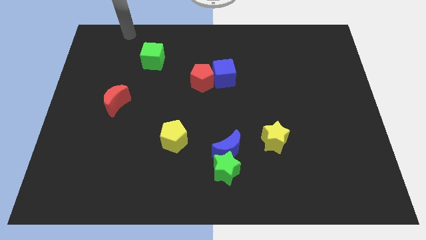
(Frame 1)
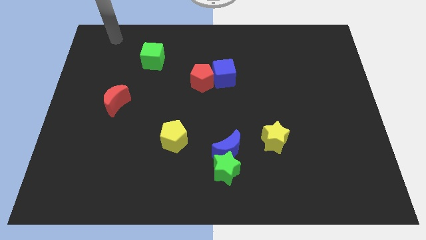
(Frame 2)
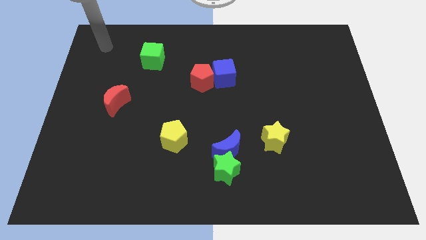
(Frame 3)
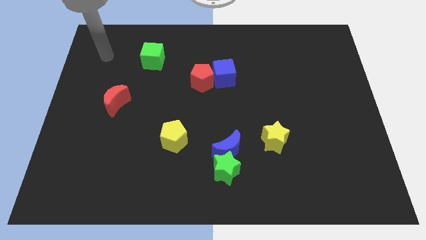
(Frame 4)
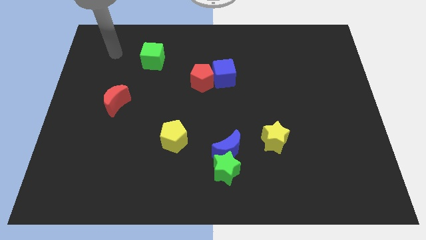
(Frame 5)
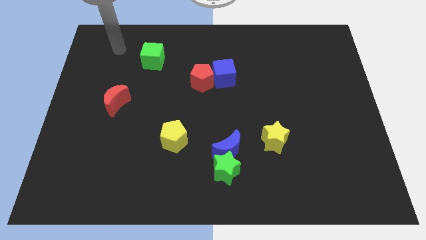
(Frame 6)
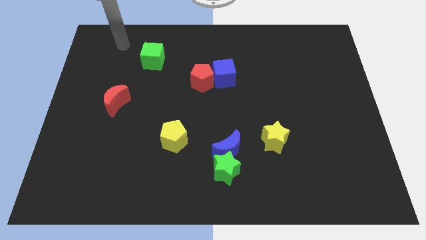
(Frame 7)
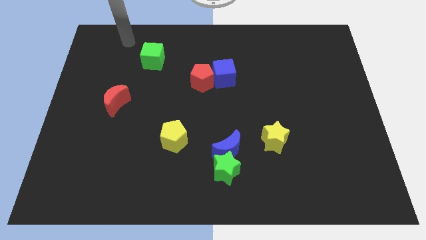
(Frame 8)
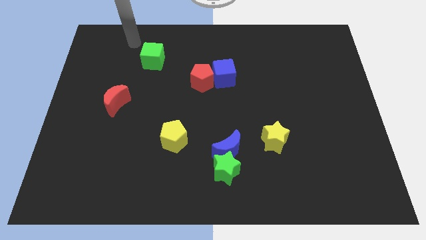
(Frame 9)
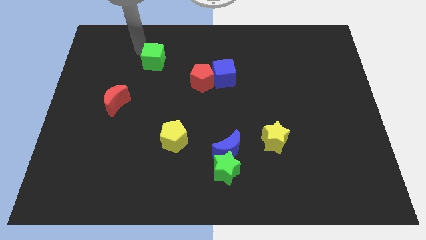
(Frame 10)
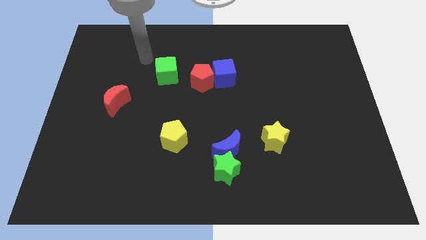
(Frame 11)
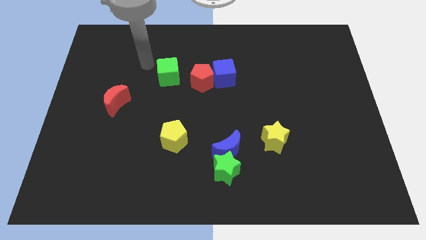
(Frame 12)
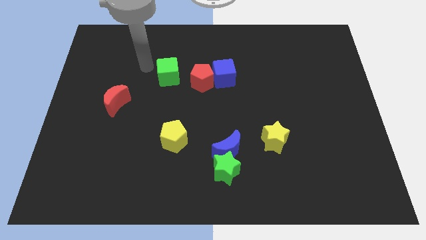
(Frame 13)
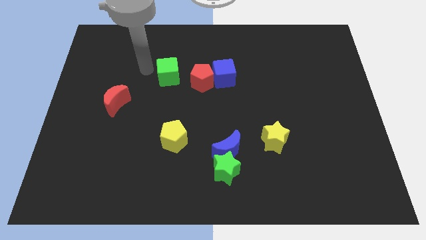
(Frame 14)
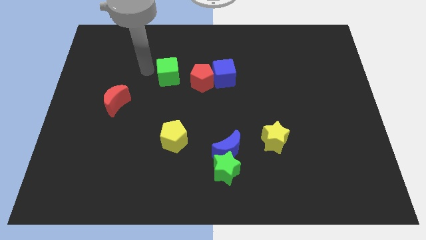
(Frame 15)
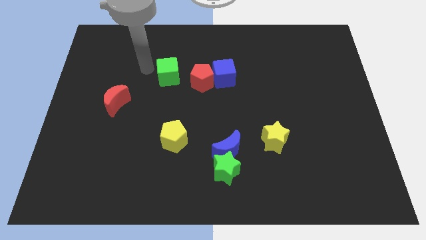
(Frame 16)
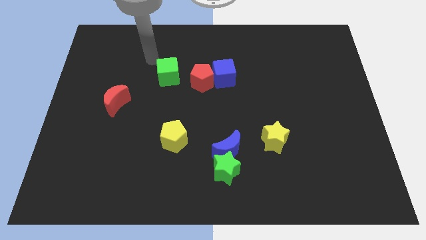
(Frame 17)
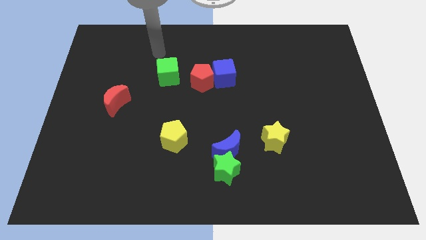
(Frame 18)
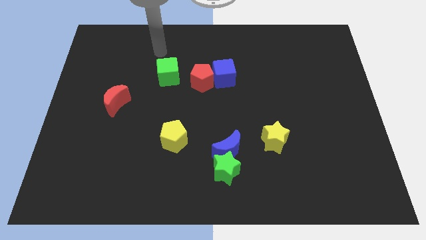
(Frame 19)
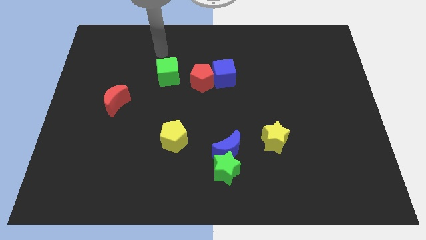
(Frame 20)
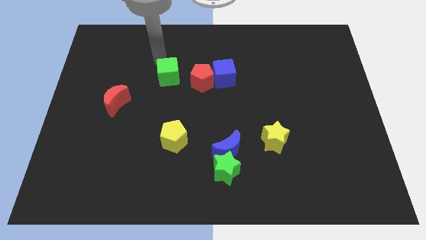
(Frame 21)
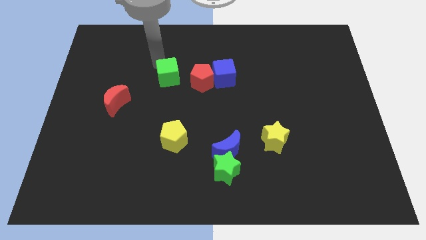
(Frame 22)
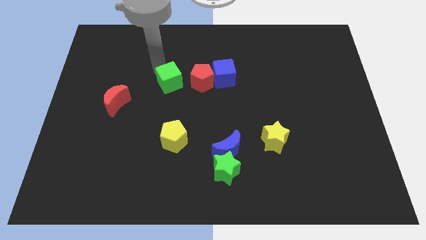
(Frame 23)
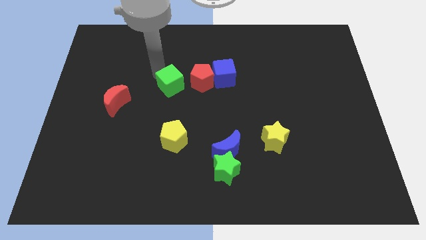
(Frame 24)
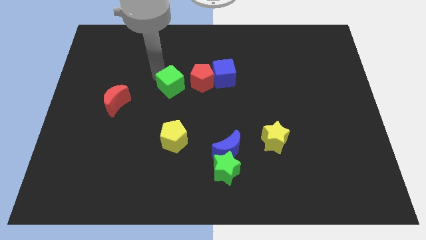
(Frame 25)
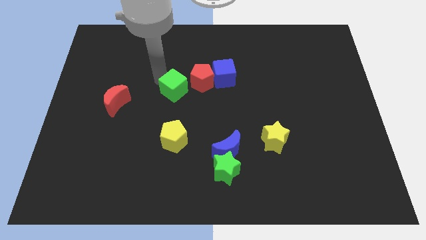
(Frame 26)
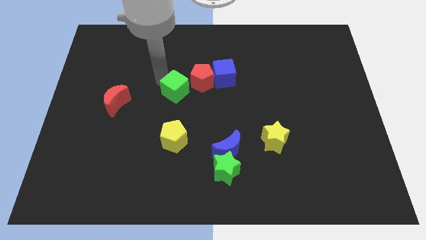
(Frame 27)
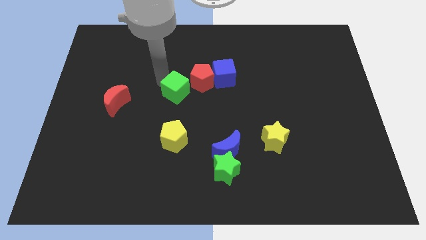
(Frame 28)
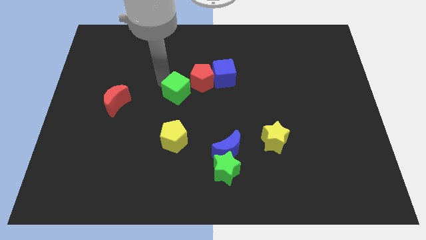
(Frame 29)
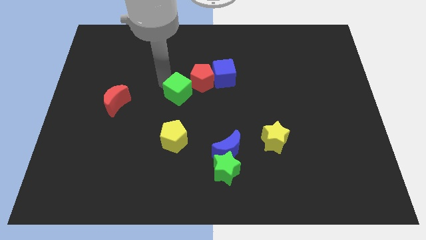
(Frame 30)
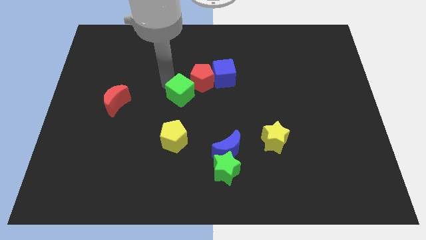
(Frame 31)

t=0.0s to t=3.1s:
place the green cube right to the red moon

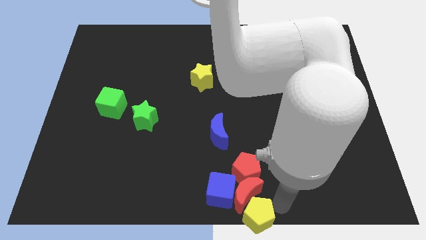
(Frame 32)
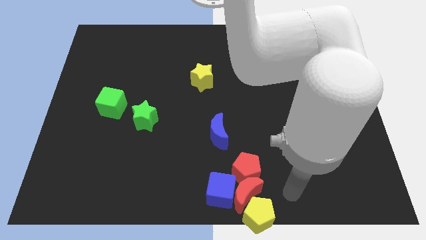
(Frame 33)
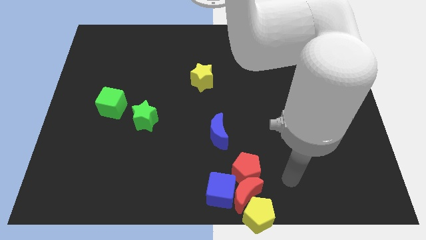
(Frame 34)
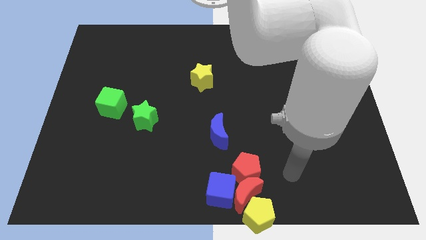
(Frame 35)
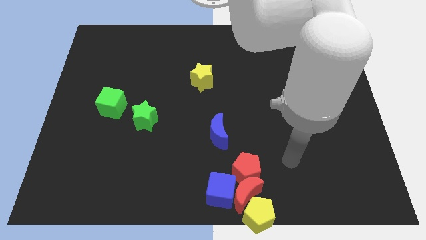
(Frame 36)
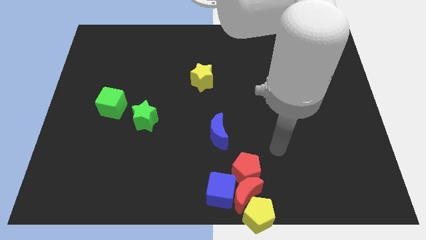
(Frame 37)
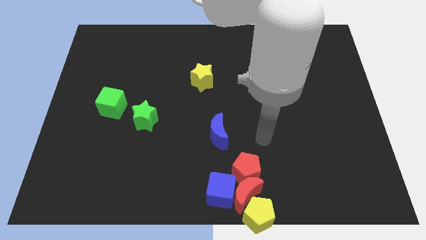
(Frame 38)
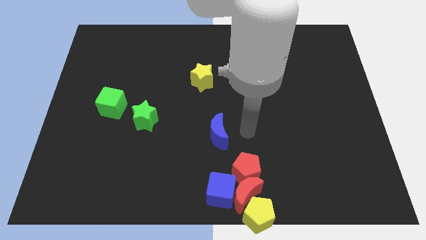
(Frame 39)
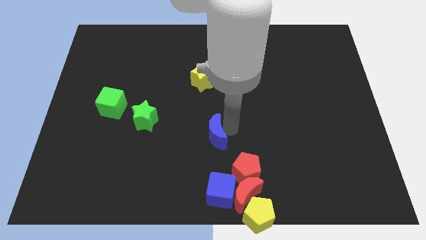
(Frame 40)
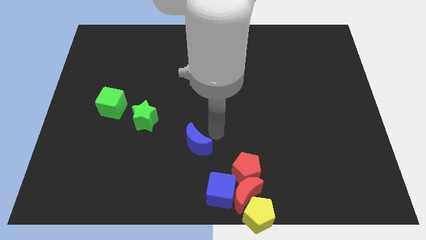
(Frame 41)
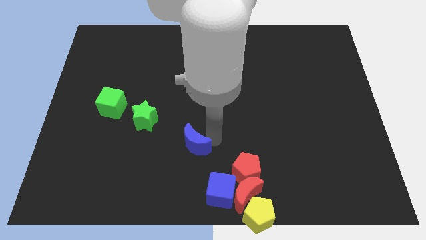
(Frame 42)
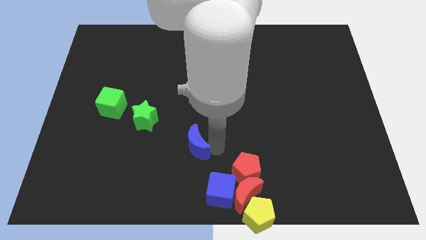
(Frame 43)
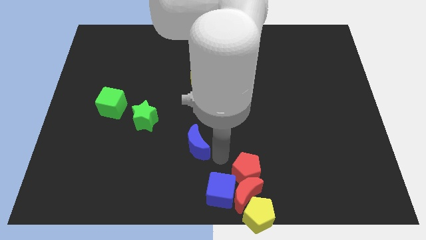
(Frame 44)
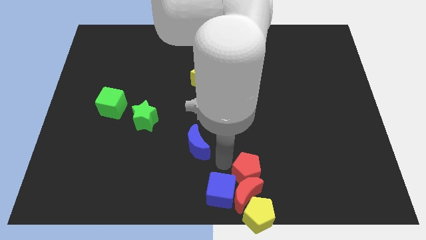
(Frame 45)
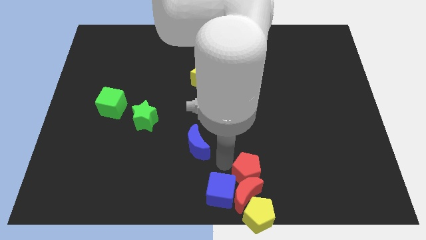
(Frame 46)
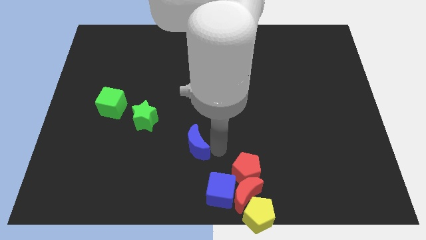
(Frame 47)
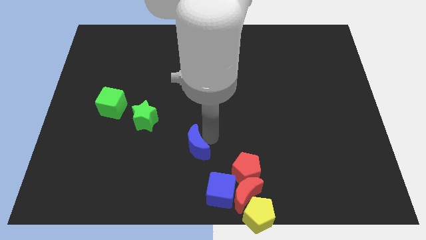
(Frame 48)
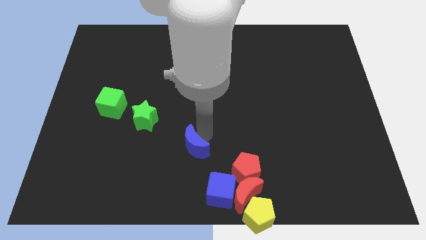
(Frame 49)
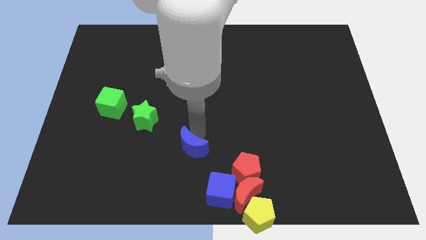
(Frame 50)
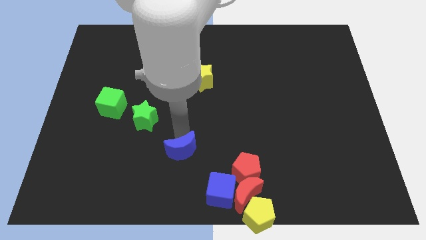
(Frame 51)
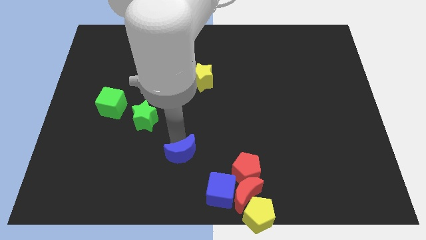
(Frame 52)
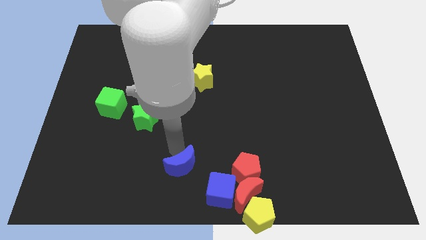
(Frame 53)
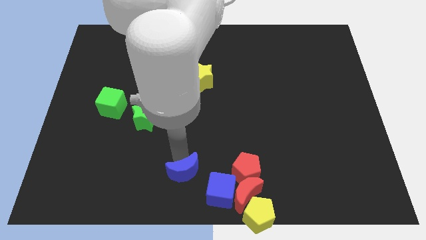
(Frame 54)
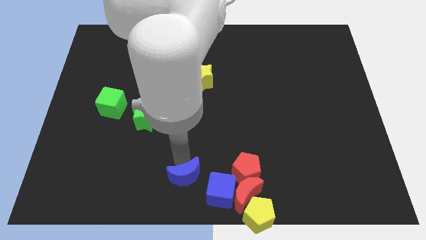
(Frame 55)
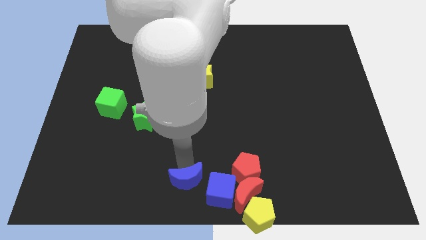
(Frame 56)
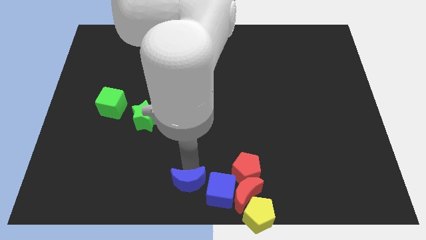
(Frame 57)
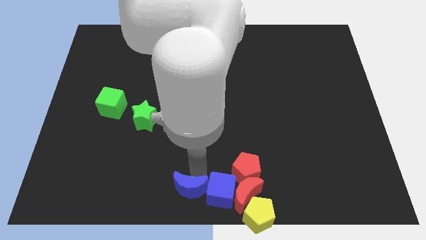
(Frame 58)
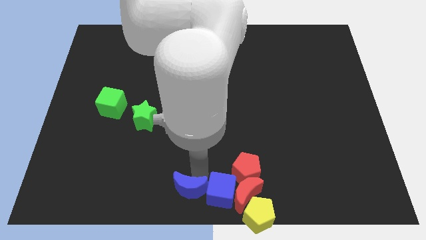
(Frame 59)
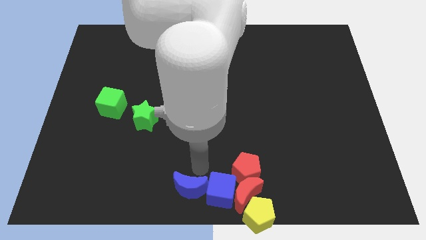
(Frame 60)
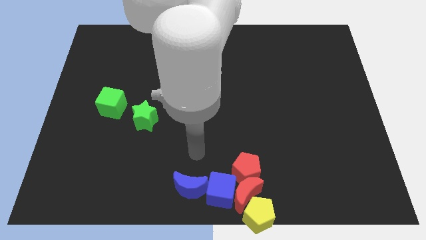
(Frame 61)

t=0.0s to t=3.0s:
move the blue crescent to the left of the blue cube

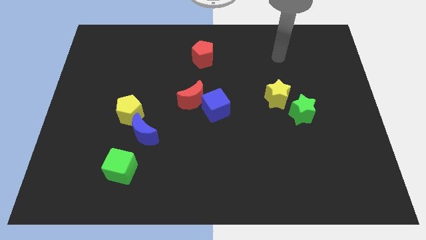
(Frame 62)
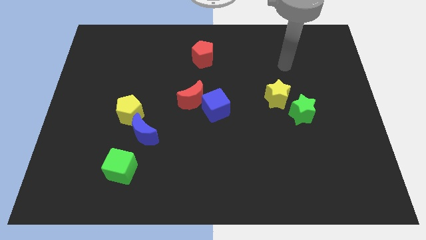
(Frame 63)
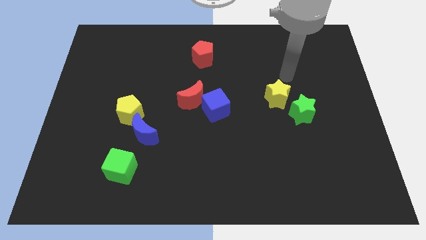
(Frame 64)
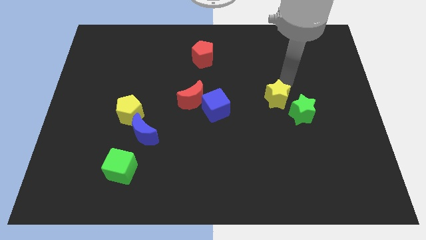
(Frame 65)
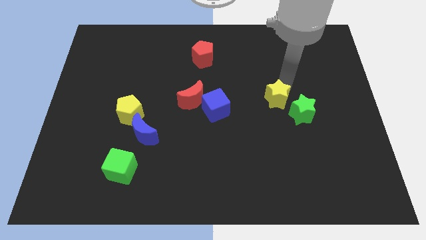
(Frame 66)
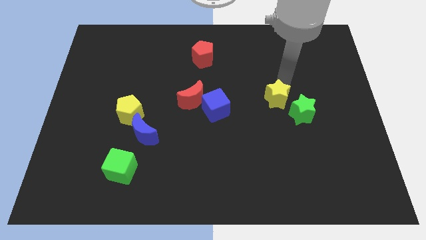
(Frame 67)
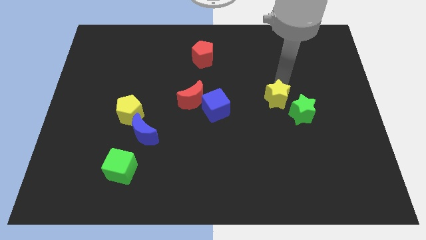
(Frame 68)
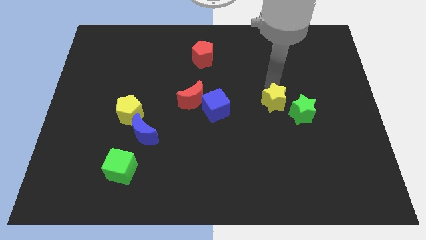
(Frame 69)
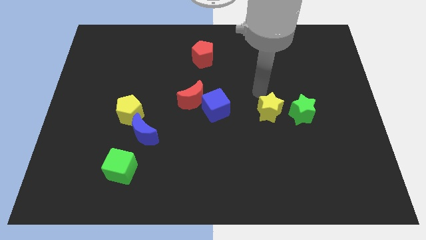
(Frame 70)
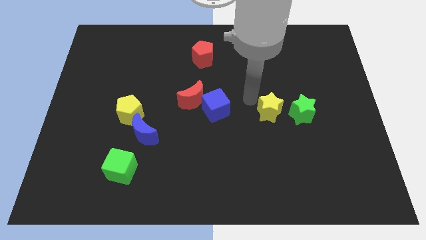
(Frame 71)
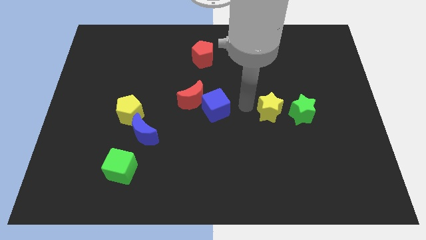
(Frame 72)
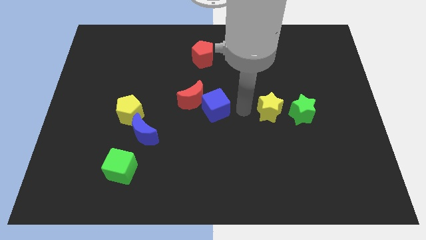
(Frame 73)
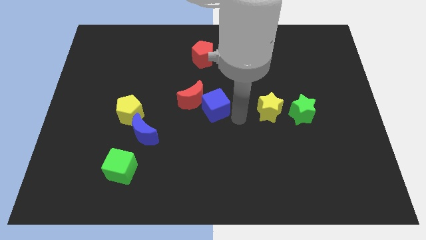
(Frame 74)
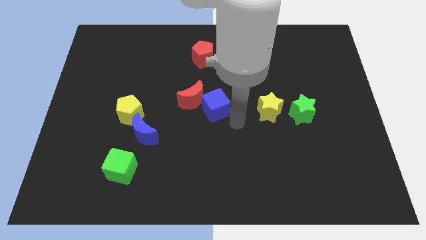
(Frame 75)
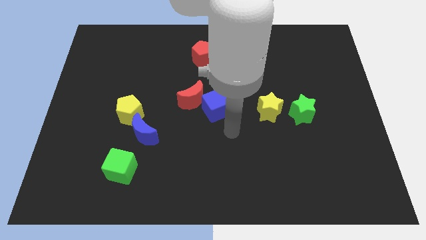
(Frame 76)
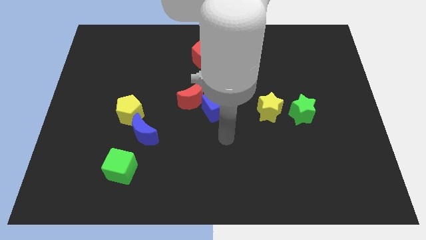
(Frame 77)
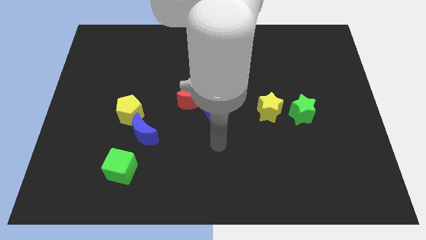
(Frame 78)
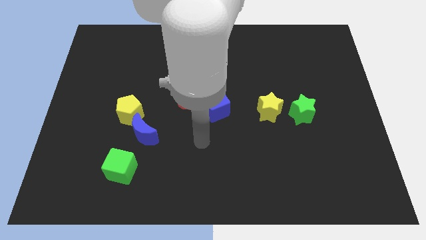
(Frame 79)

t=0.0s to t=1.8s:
push the yellow star slightly towards down

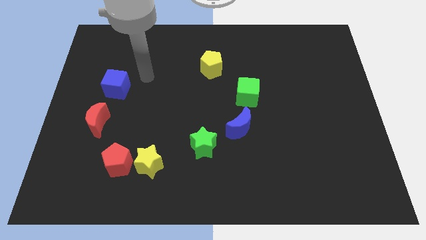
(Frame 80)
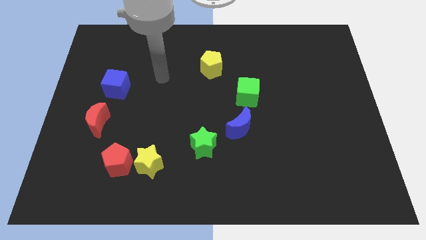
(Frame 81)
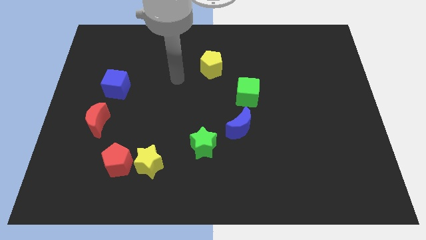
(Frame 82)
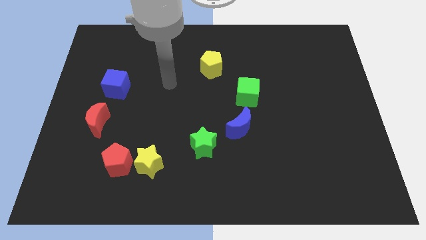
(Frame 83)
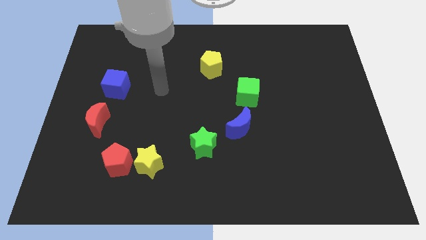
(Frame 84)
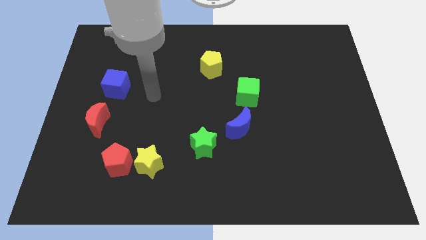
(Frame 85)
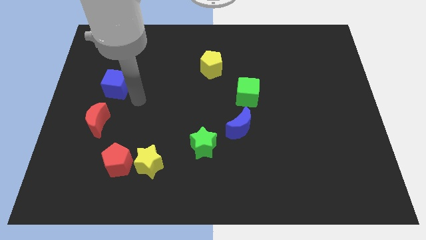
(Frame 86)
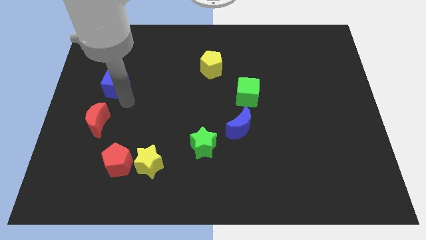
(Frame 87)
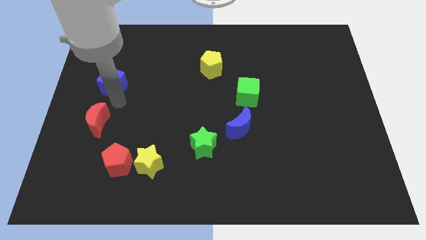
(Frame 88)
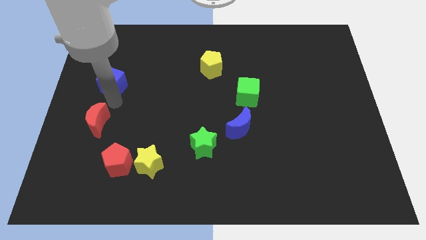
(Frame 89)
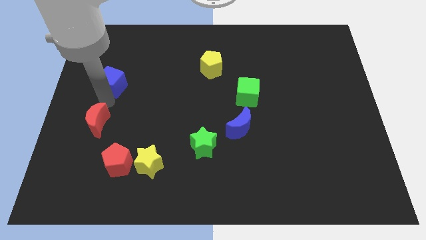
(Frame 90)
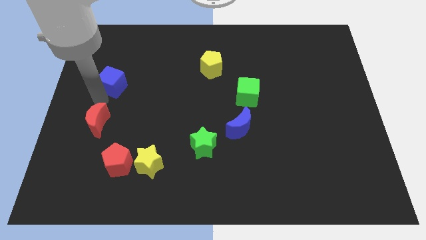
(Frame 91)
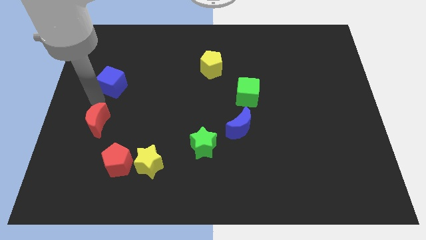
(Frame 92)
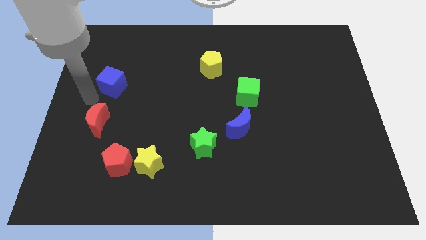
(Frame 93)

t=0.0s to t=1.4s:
slightly move the blue cube to the right of the board
